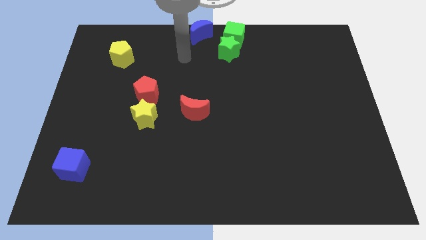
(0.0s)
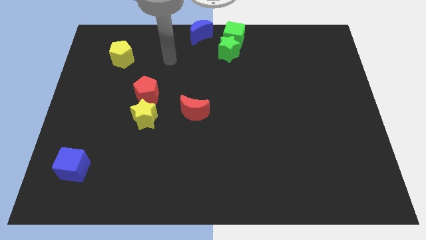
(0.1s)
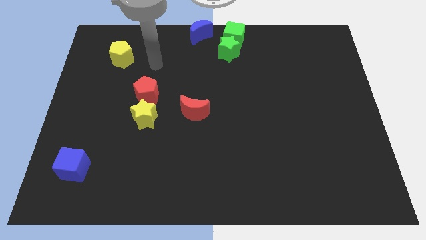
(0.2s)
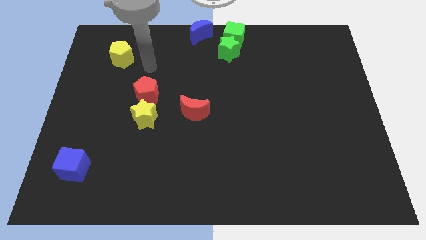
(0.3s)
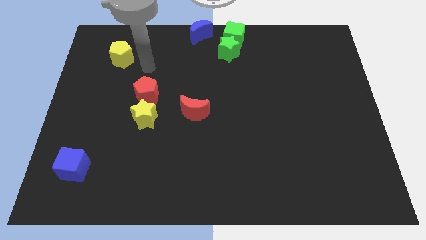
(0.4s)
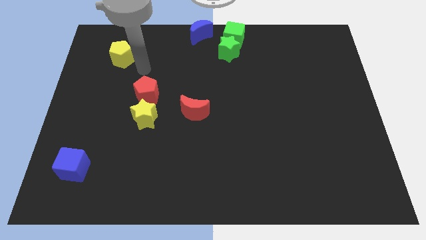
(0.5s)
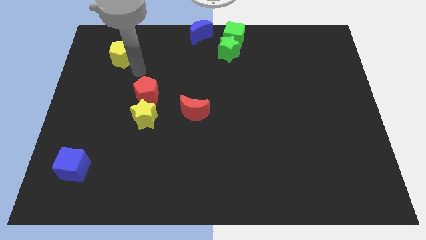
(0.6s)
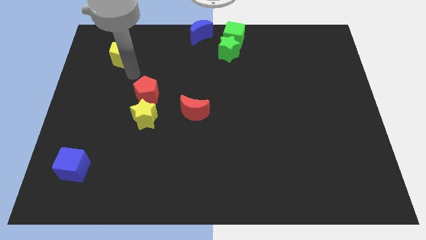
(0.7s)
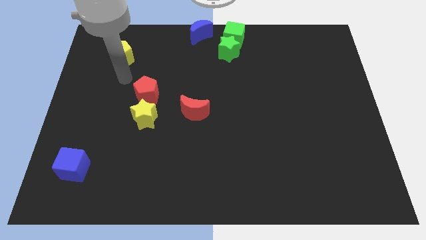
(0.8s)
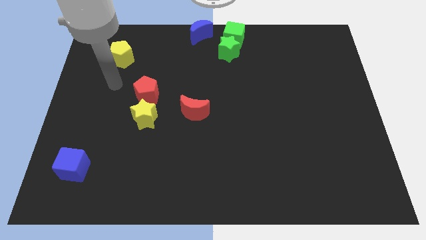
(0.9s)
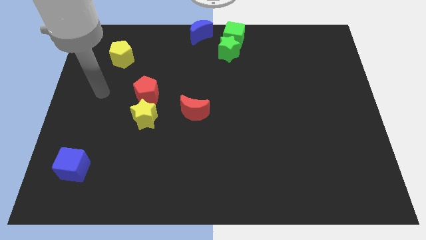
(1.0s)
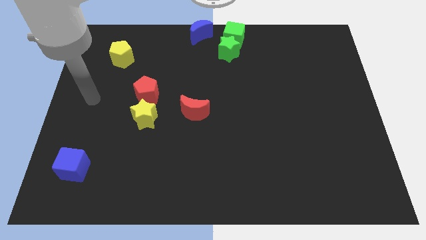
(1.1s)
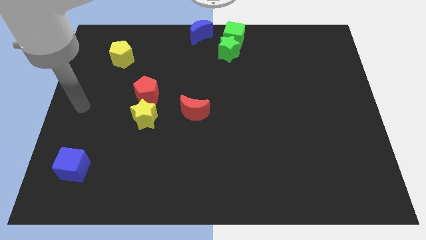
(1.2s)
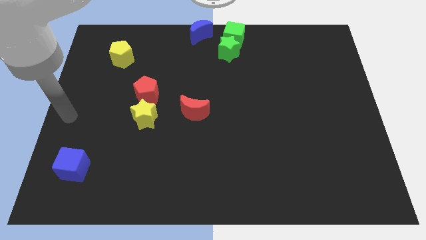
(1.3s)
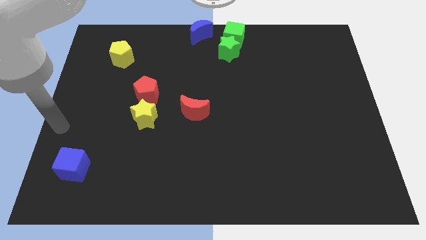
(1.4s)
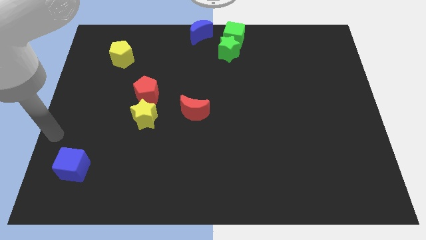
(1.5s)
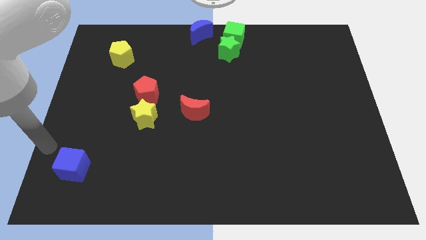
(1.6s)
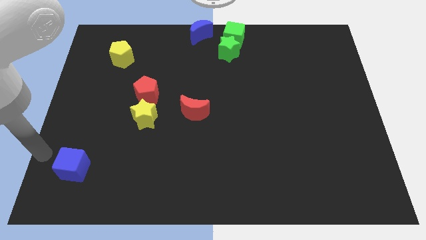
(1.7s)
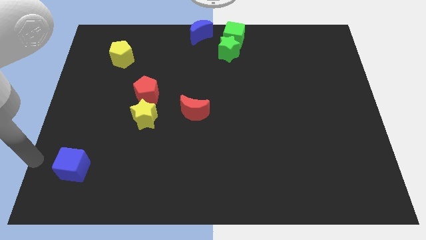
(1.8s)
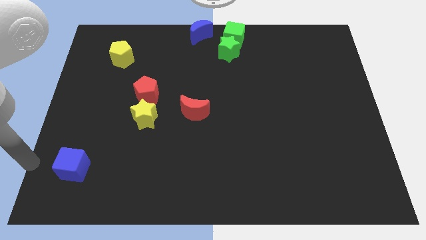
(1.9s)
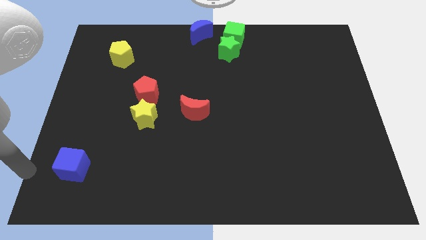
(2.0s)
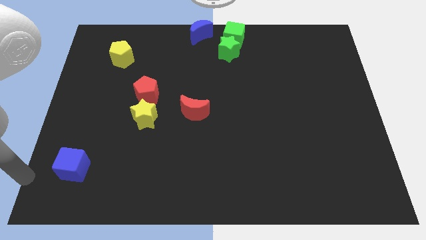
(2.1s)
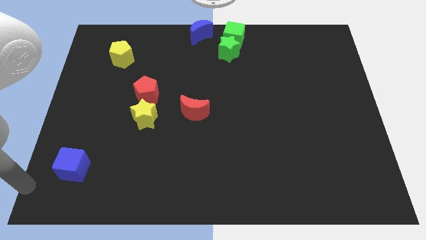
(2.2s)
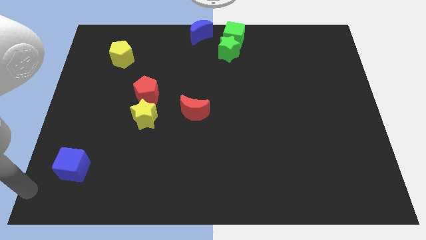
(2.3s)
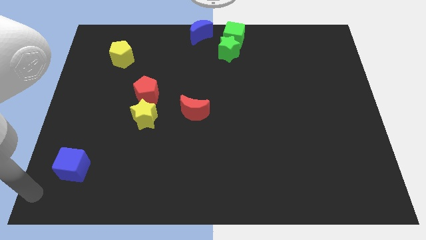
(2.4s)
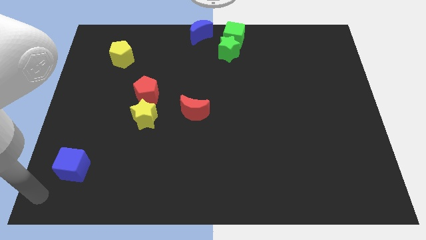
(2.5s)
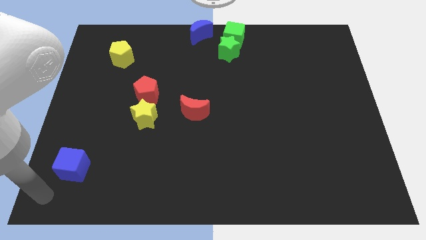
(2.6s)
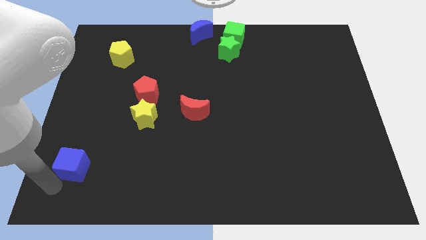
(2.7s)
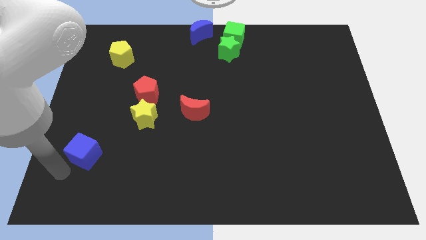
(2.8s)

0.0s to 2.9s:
move the arm towards the bottom left of the blue cube

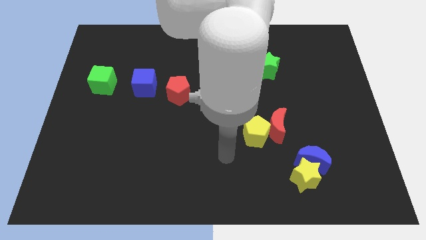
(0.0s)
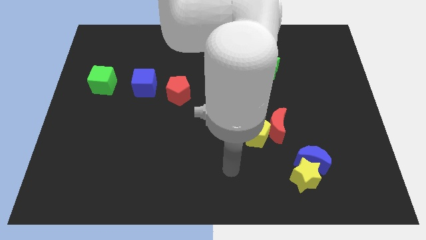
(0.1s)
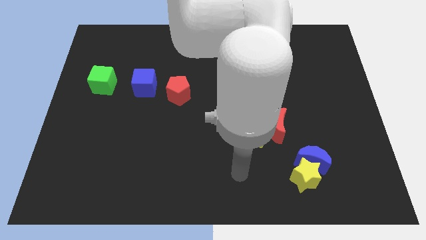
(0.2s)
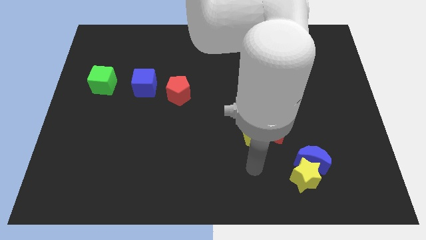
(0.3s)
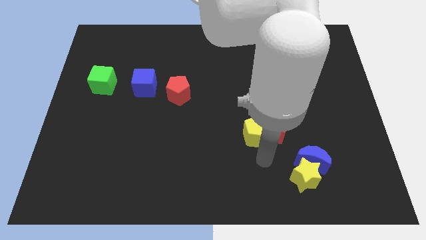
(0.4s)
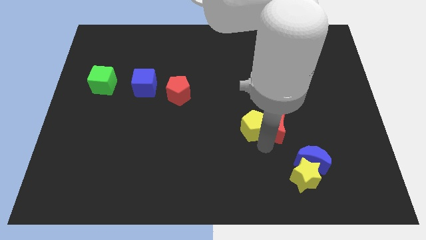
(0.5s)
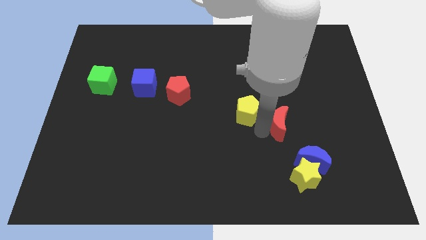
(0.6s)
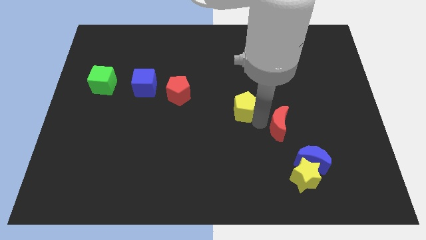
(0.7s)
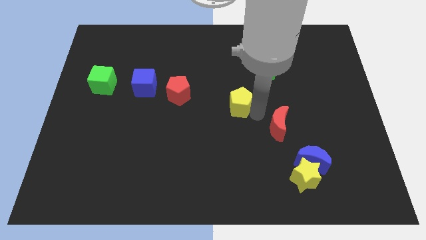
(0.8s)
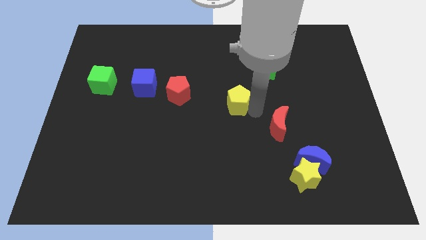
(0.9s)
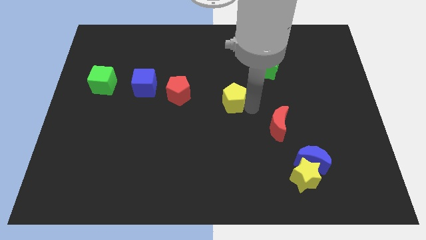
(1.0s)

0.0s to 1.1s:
separate the yellow pentagon and the red moon

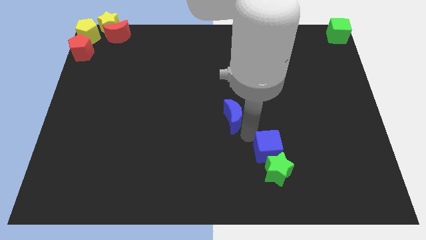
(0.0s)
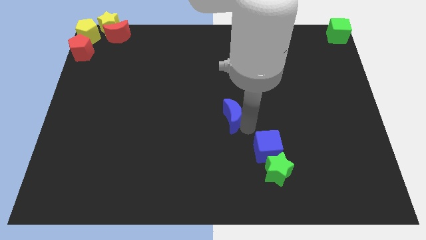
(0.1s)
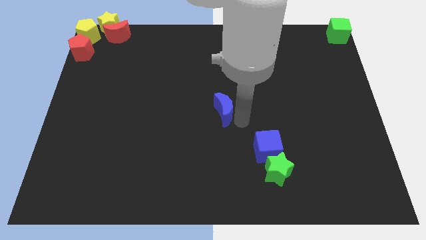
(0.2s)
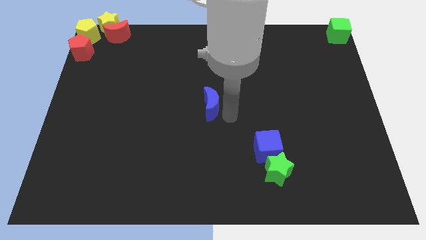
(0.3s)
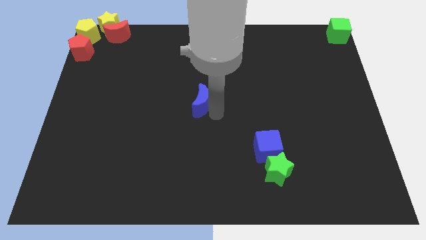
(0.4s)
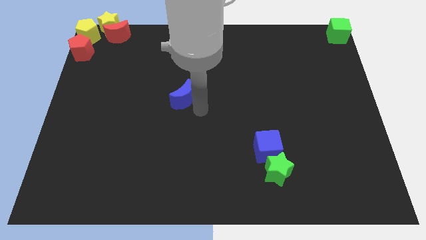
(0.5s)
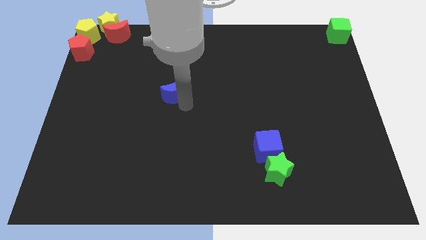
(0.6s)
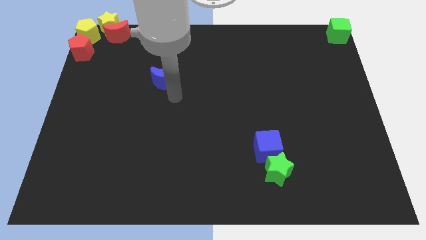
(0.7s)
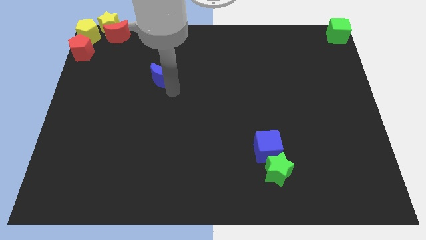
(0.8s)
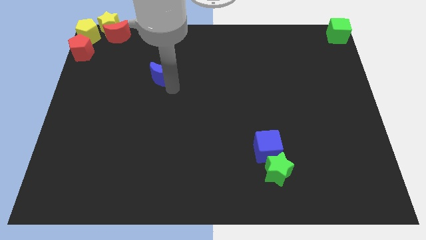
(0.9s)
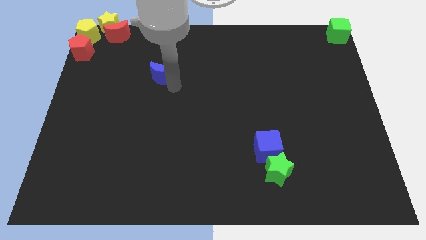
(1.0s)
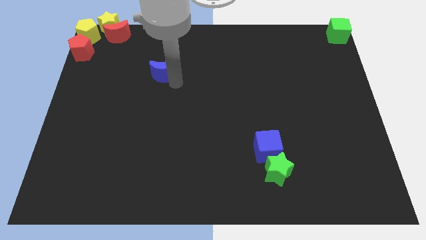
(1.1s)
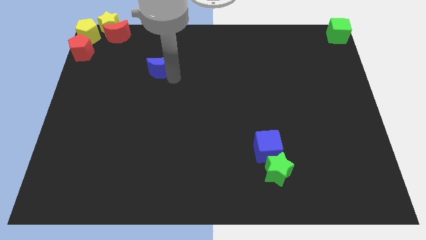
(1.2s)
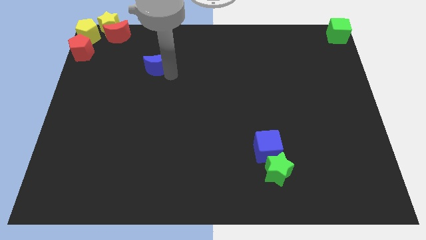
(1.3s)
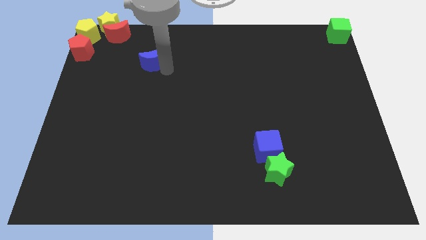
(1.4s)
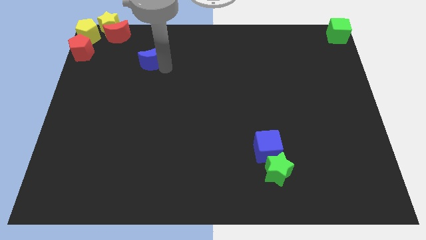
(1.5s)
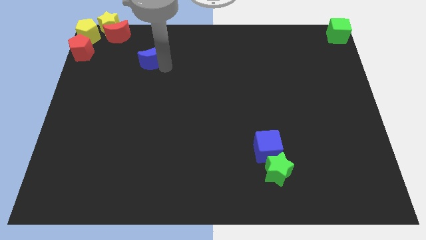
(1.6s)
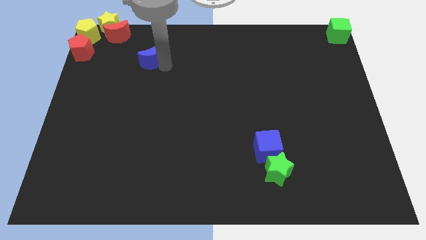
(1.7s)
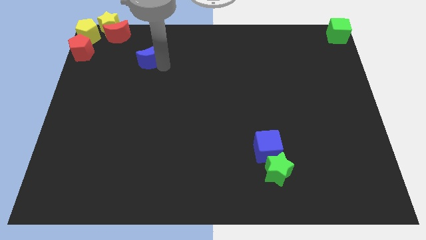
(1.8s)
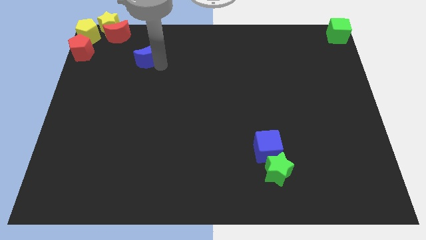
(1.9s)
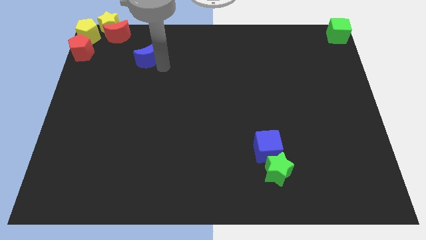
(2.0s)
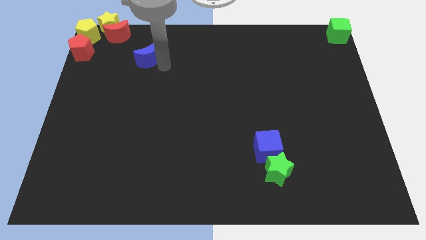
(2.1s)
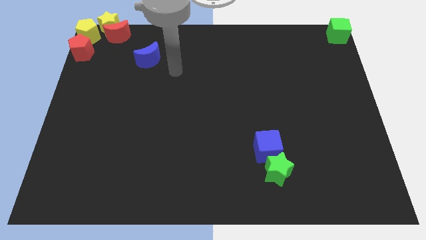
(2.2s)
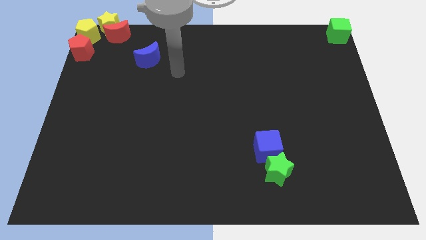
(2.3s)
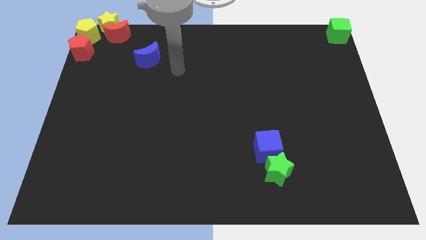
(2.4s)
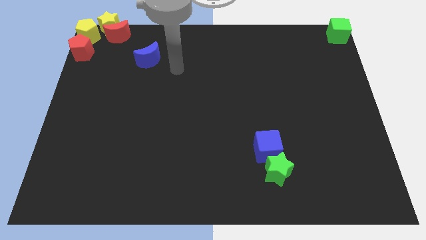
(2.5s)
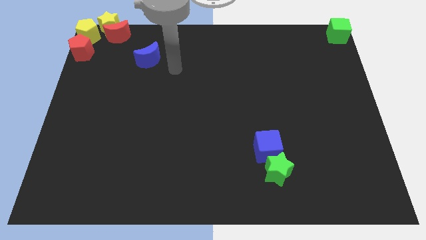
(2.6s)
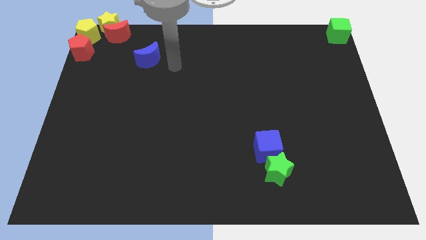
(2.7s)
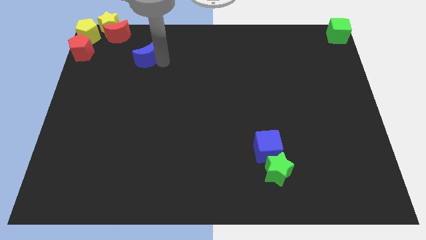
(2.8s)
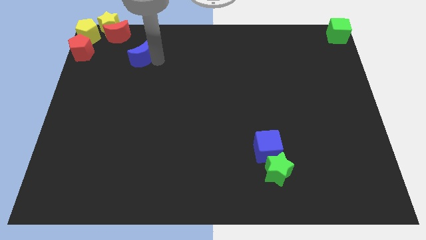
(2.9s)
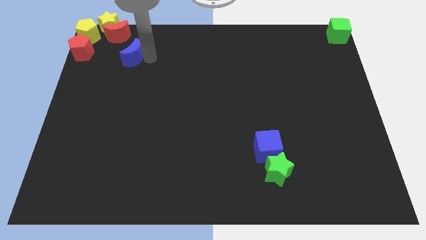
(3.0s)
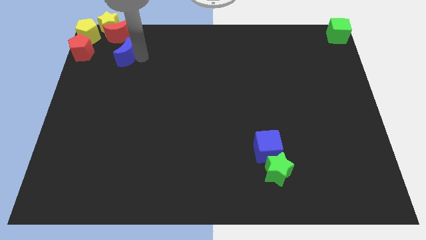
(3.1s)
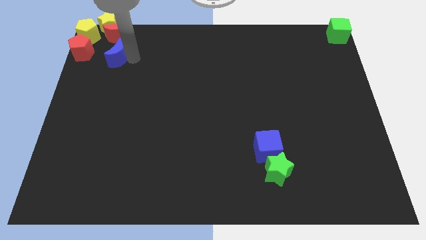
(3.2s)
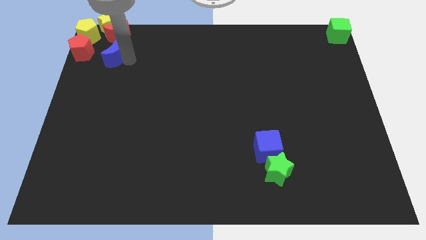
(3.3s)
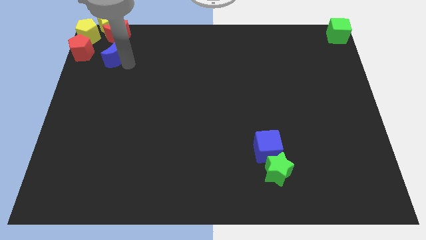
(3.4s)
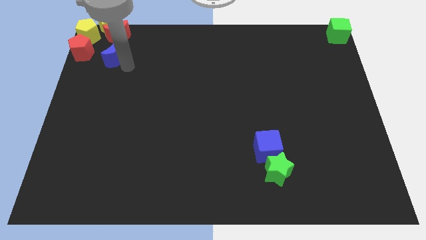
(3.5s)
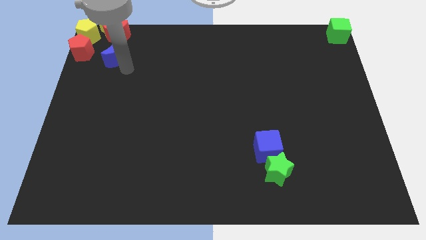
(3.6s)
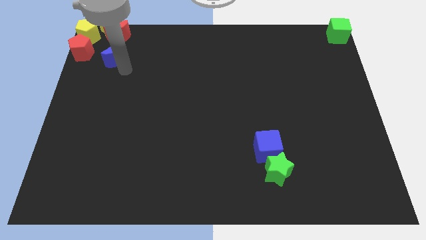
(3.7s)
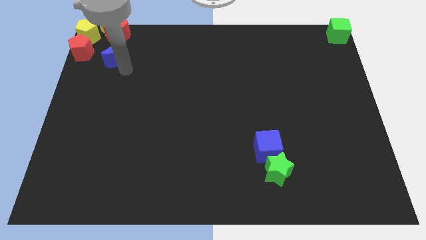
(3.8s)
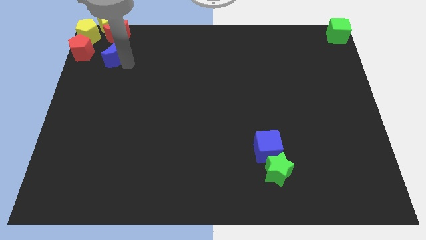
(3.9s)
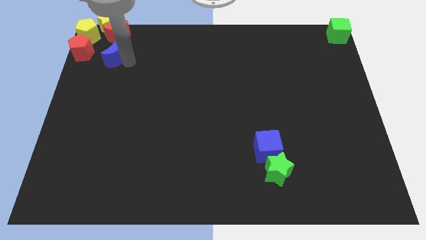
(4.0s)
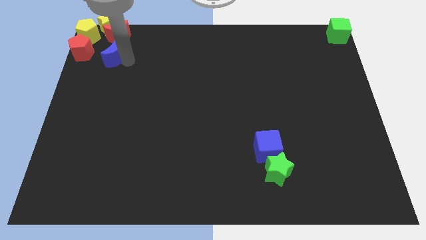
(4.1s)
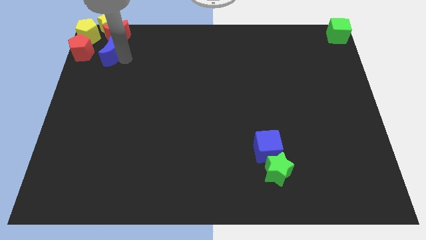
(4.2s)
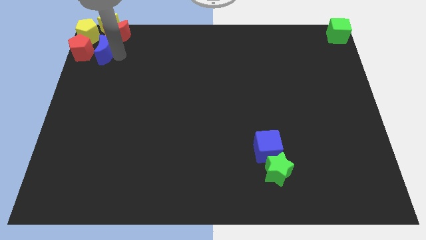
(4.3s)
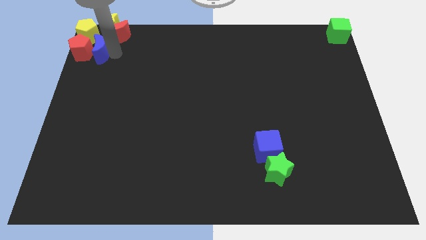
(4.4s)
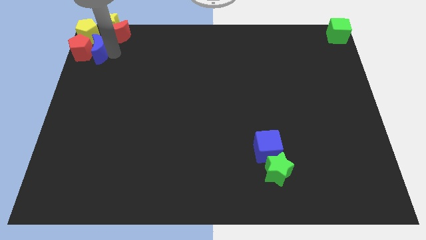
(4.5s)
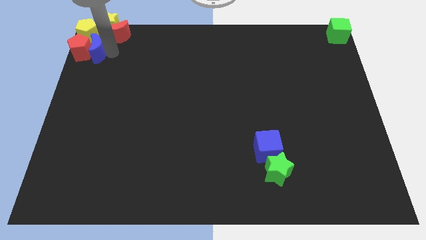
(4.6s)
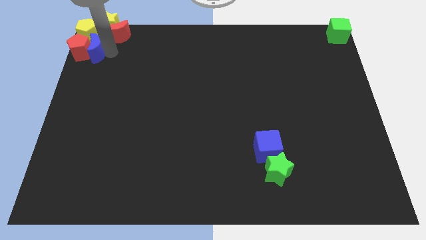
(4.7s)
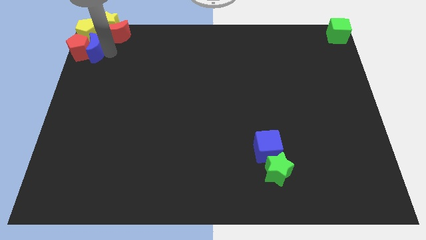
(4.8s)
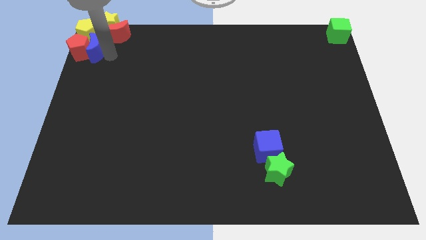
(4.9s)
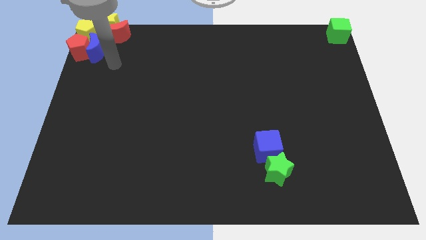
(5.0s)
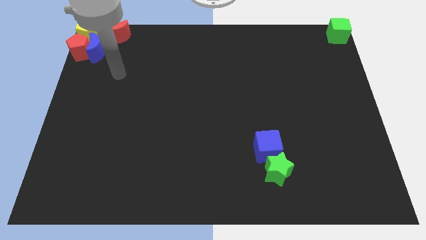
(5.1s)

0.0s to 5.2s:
push the blue crescent to the top of the board
